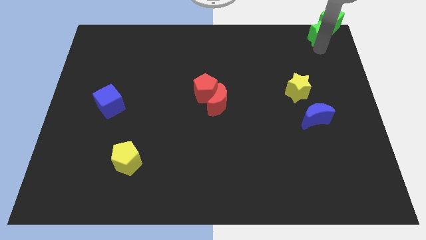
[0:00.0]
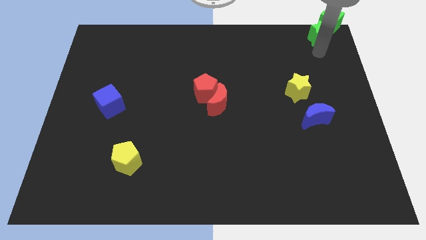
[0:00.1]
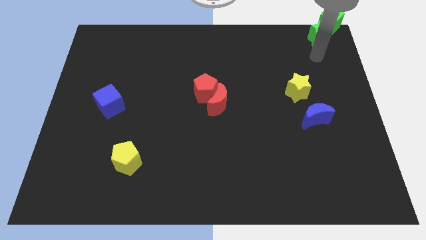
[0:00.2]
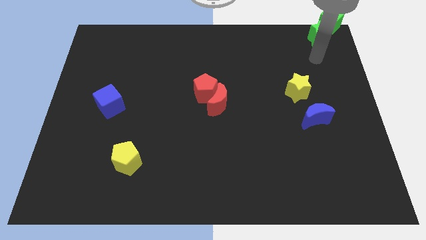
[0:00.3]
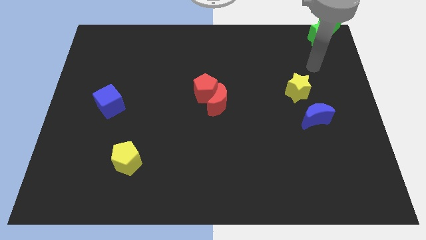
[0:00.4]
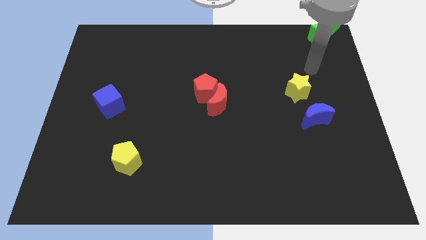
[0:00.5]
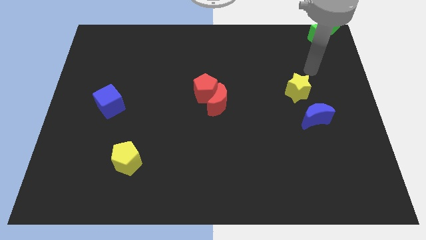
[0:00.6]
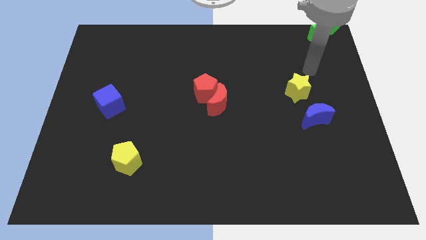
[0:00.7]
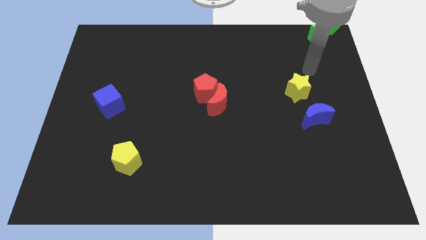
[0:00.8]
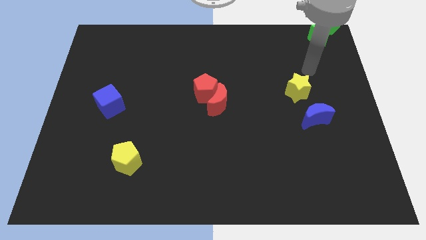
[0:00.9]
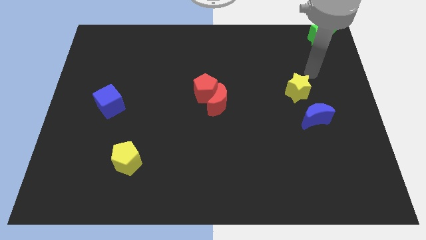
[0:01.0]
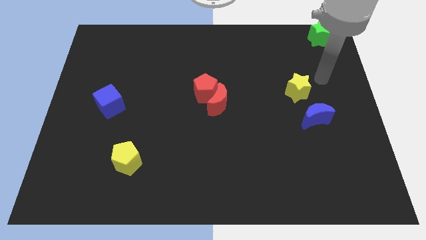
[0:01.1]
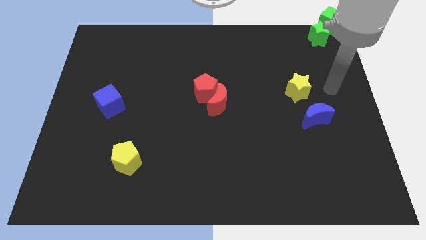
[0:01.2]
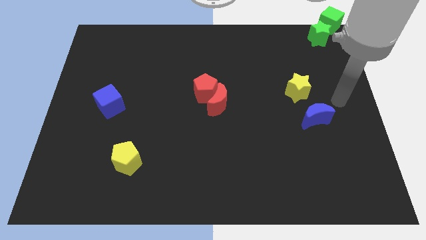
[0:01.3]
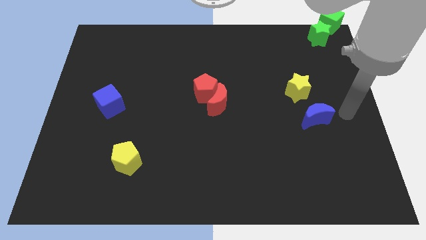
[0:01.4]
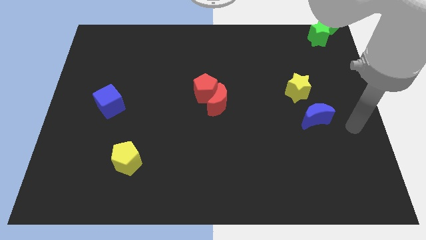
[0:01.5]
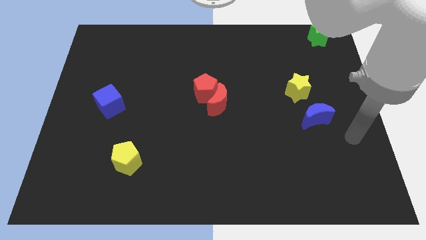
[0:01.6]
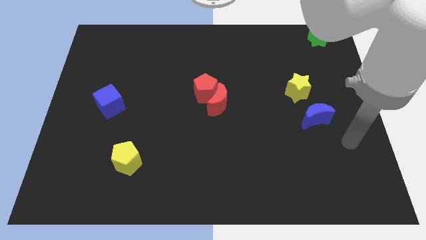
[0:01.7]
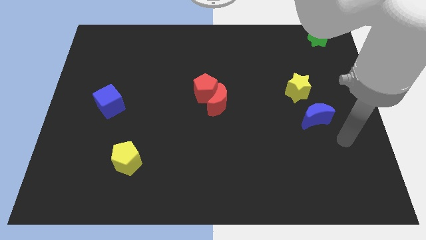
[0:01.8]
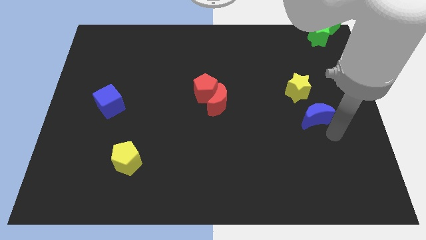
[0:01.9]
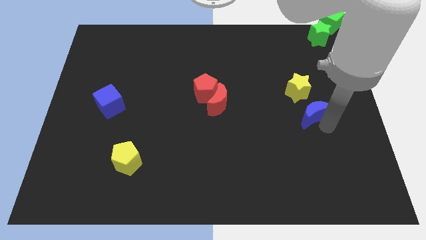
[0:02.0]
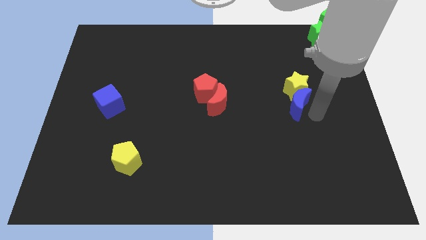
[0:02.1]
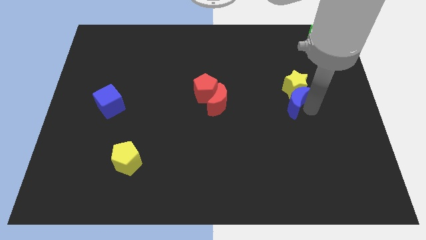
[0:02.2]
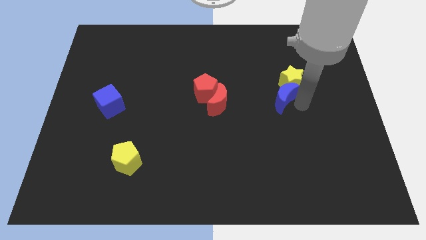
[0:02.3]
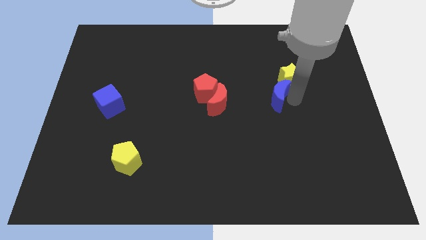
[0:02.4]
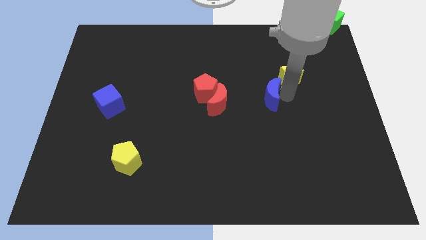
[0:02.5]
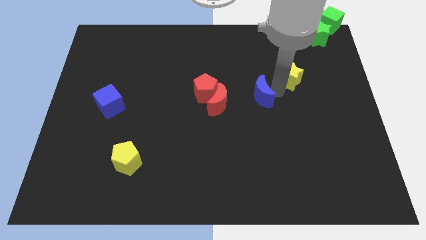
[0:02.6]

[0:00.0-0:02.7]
move blue moon into the yellow star

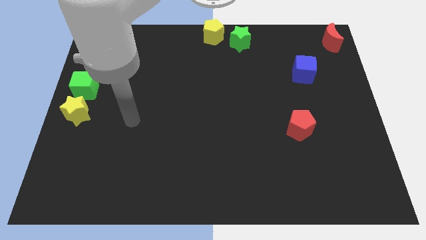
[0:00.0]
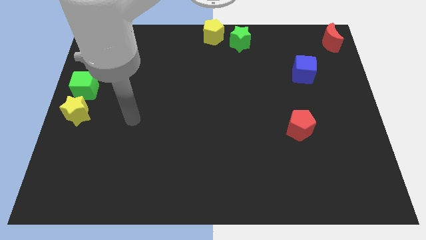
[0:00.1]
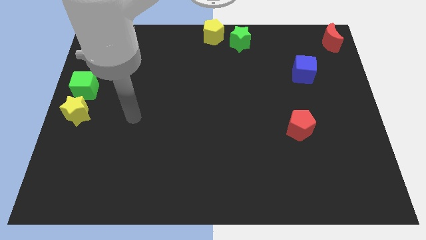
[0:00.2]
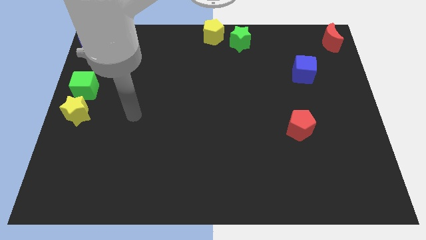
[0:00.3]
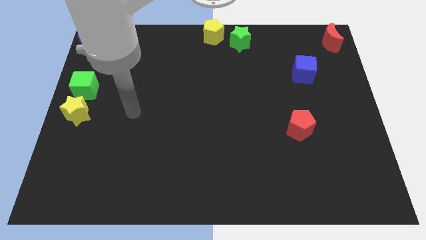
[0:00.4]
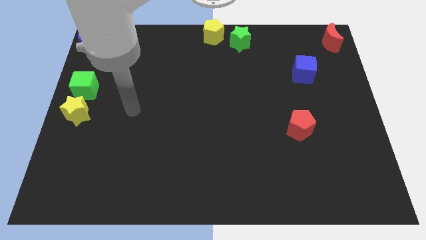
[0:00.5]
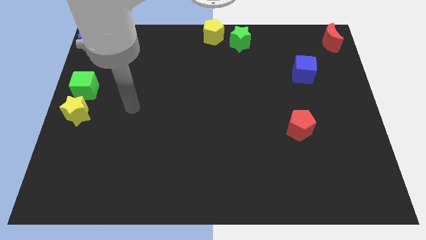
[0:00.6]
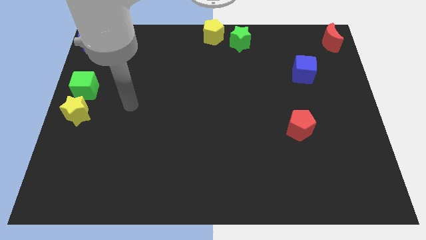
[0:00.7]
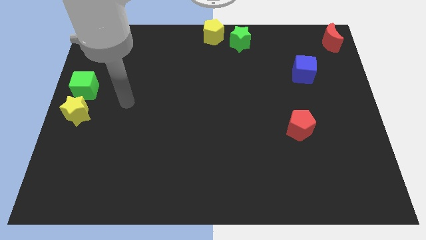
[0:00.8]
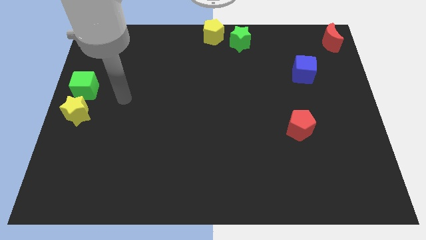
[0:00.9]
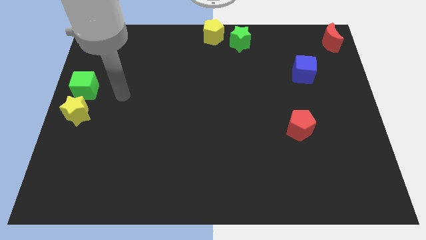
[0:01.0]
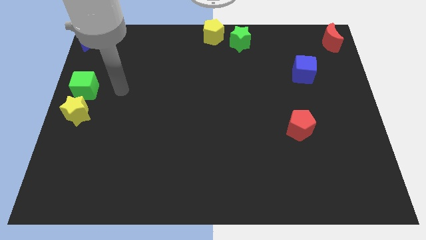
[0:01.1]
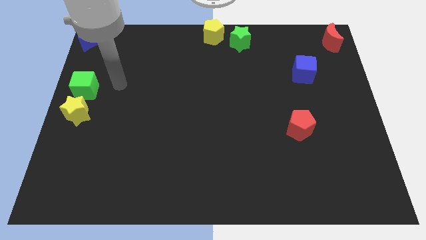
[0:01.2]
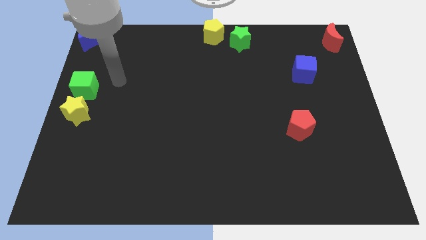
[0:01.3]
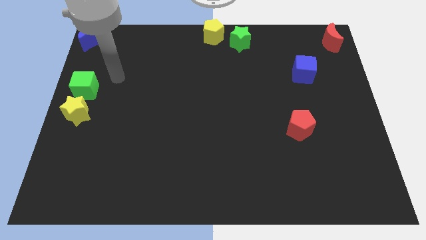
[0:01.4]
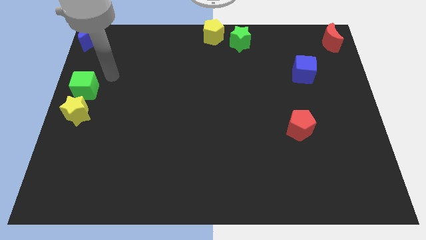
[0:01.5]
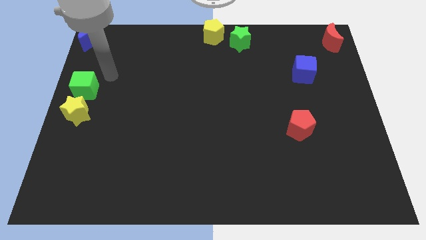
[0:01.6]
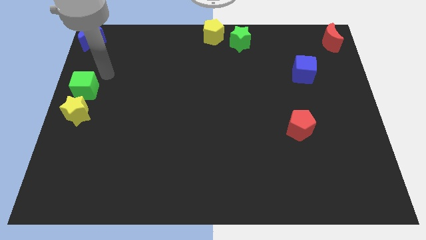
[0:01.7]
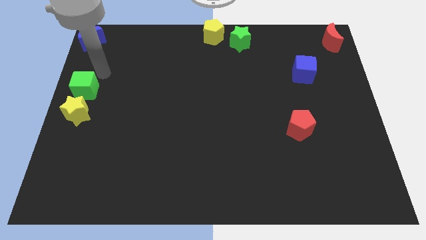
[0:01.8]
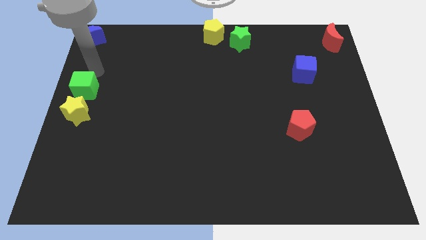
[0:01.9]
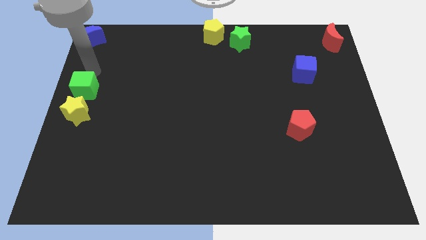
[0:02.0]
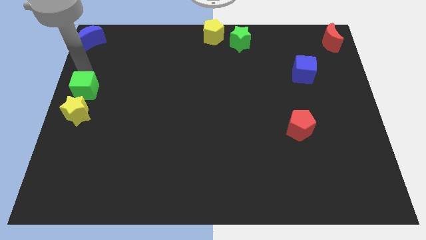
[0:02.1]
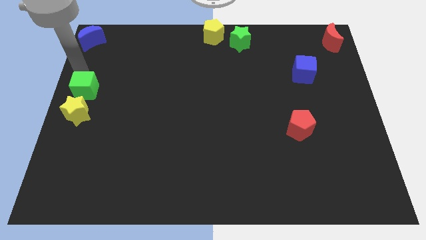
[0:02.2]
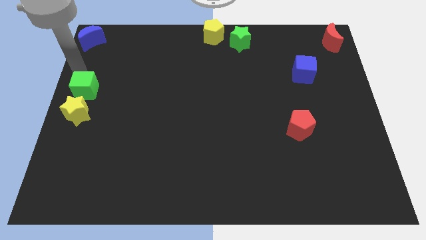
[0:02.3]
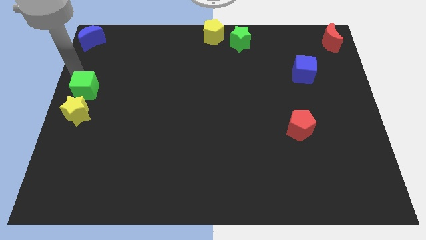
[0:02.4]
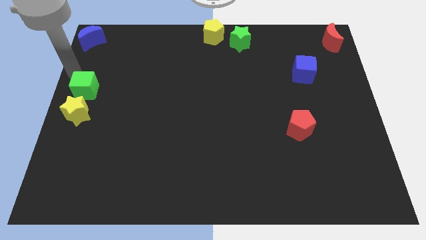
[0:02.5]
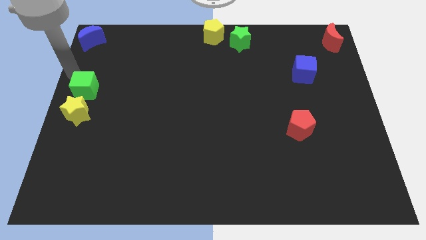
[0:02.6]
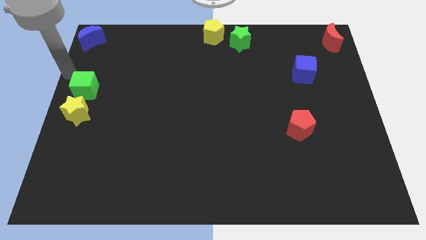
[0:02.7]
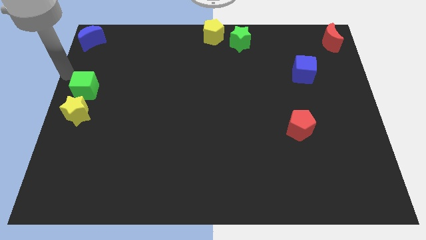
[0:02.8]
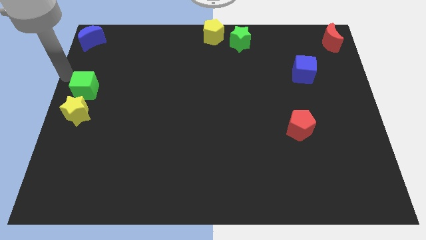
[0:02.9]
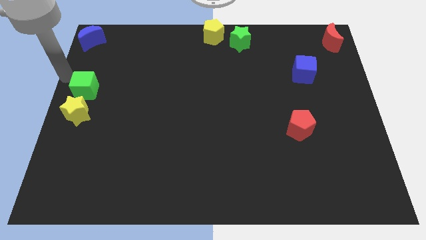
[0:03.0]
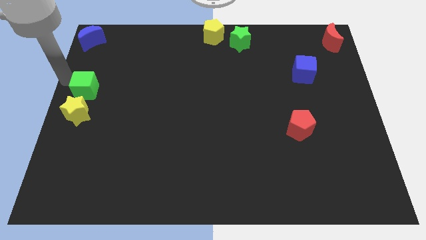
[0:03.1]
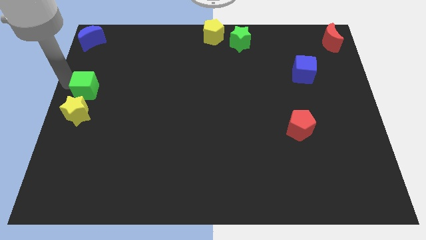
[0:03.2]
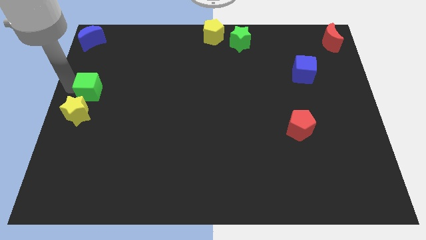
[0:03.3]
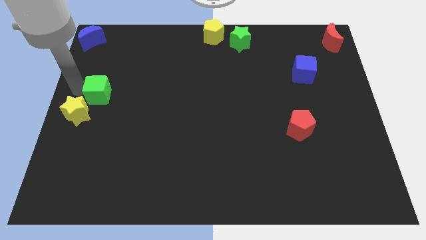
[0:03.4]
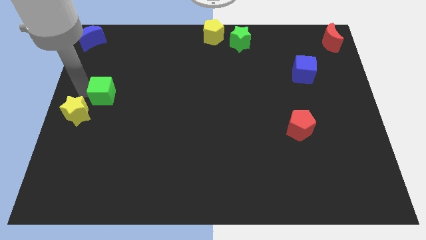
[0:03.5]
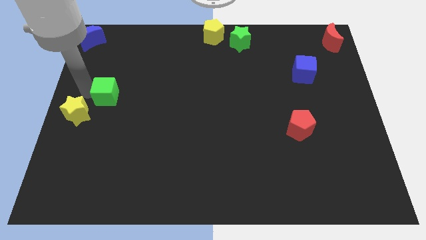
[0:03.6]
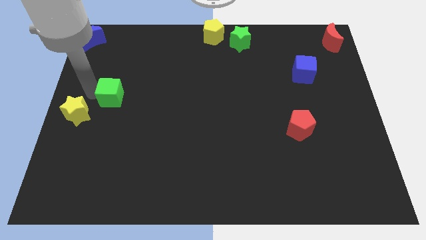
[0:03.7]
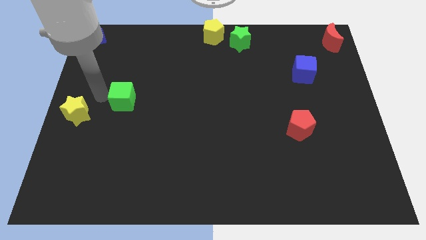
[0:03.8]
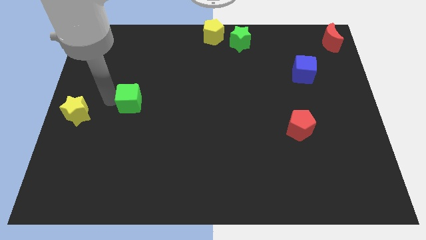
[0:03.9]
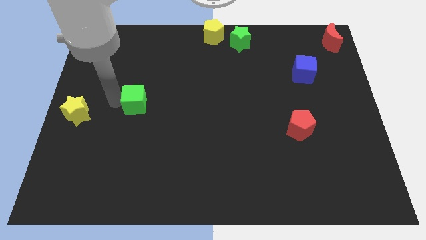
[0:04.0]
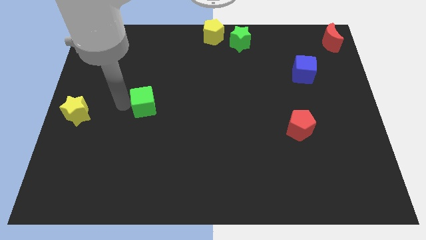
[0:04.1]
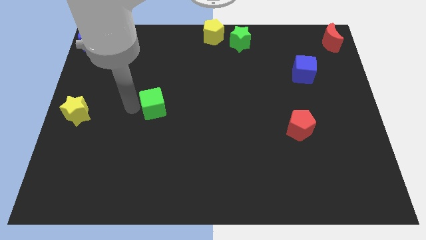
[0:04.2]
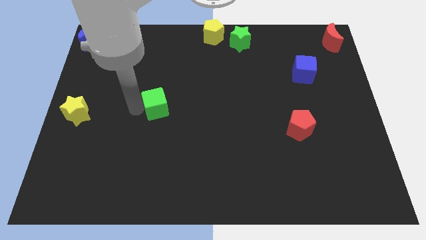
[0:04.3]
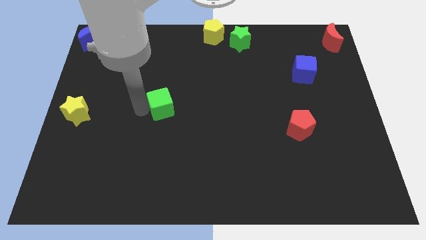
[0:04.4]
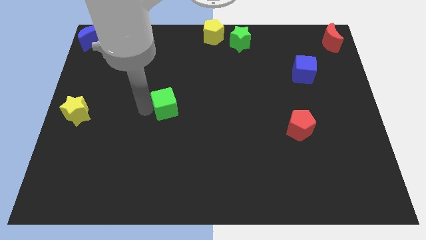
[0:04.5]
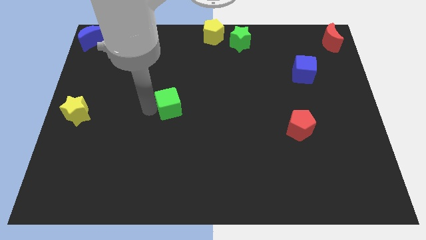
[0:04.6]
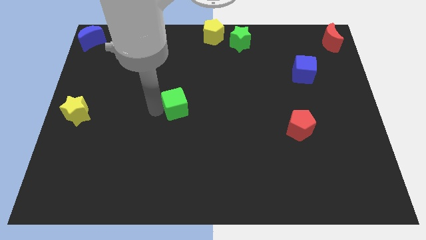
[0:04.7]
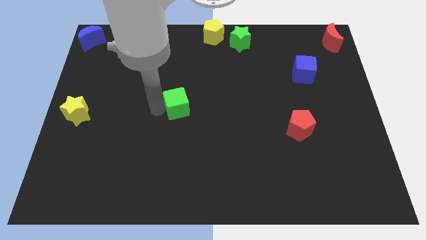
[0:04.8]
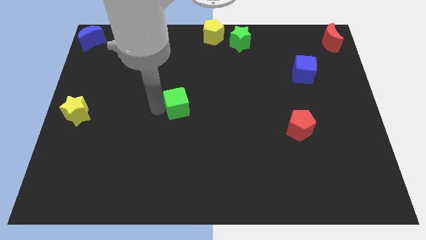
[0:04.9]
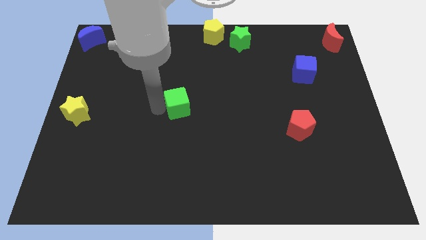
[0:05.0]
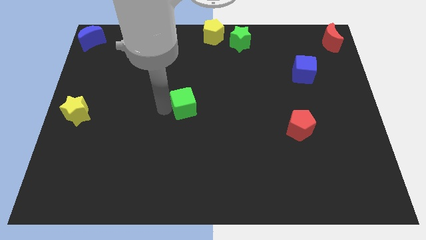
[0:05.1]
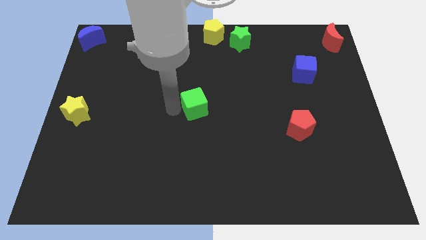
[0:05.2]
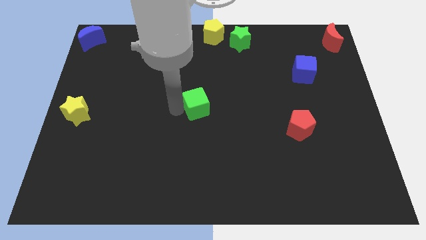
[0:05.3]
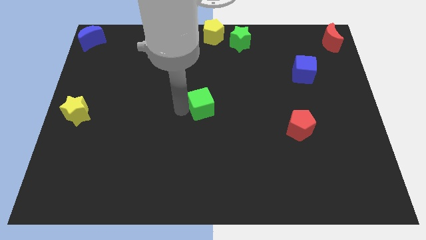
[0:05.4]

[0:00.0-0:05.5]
place the green cube in between the yellow star and red pentagon

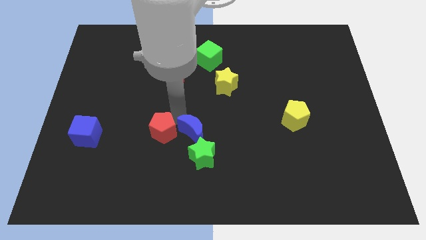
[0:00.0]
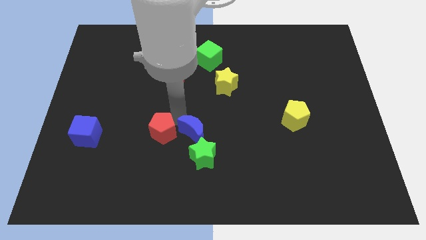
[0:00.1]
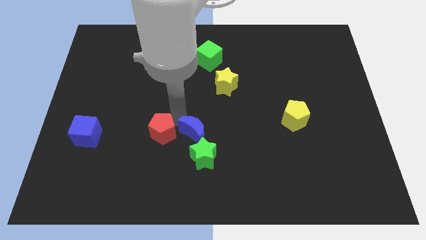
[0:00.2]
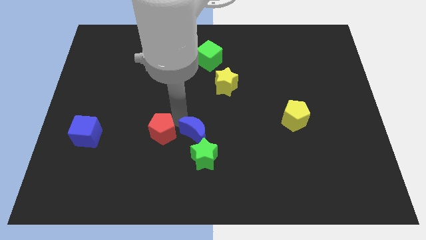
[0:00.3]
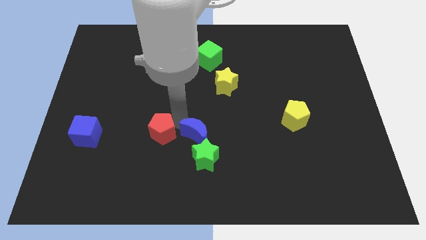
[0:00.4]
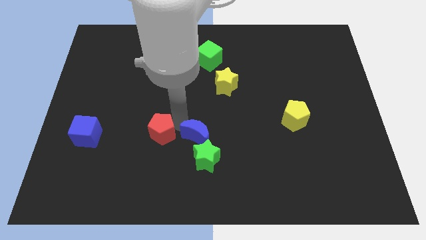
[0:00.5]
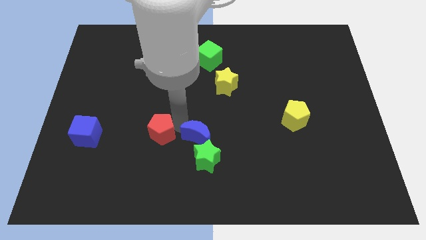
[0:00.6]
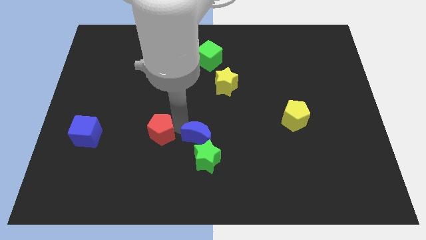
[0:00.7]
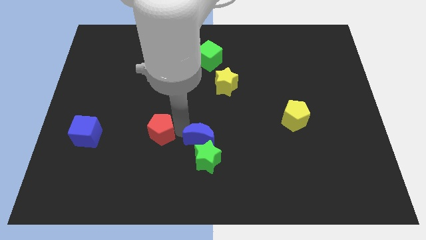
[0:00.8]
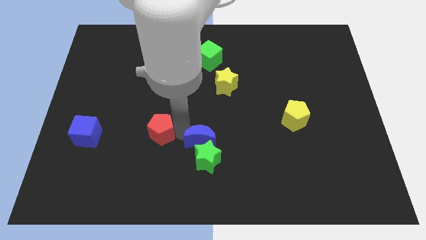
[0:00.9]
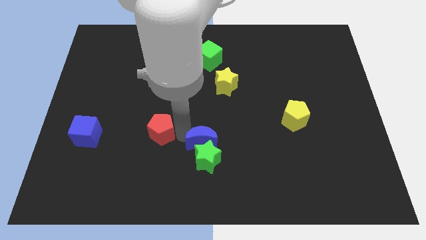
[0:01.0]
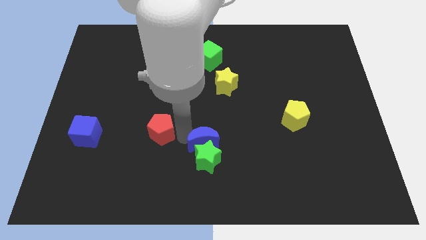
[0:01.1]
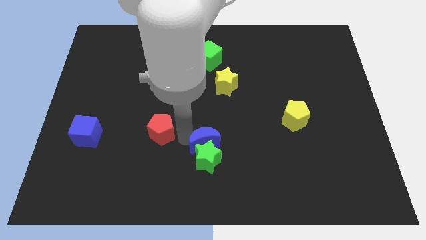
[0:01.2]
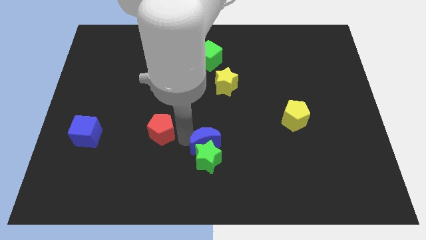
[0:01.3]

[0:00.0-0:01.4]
separate the blue crescent and the red pentagon
